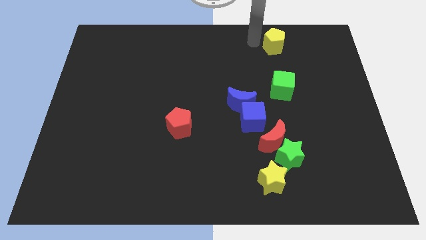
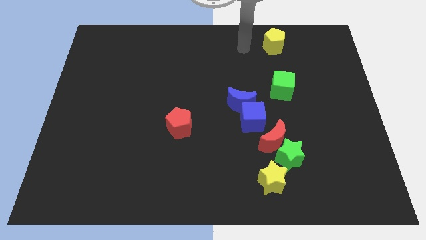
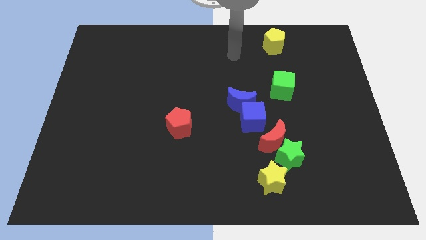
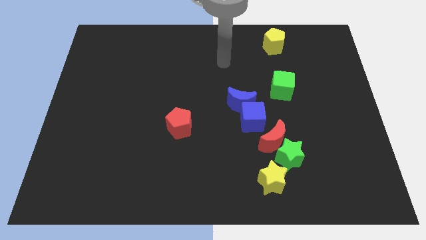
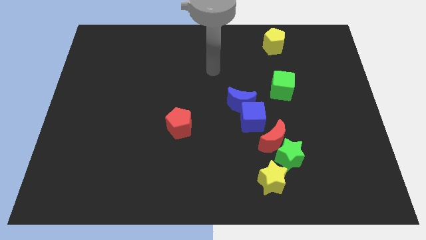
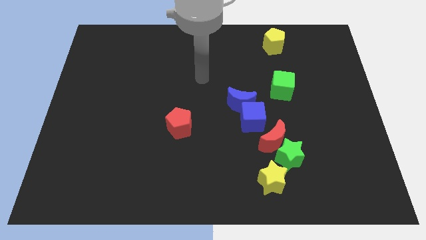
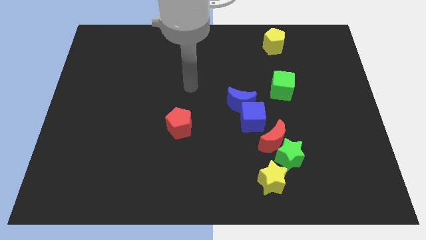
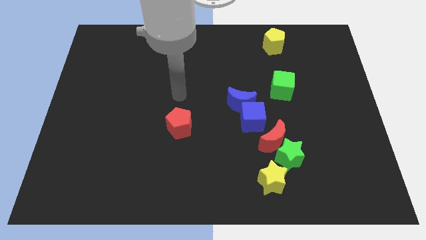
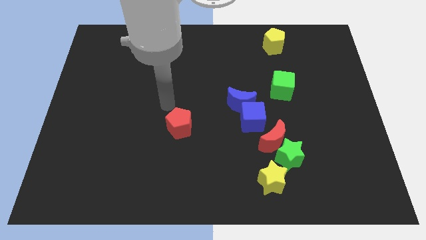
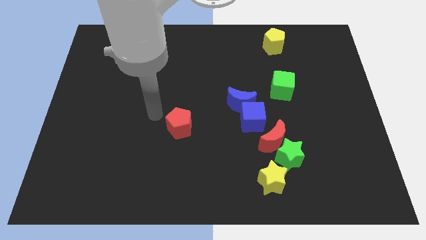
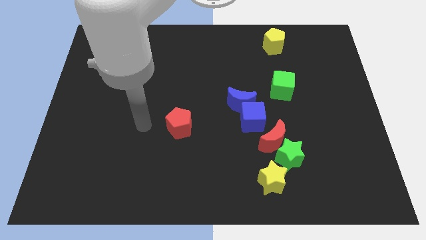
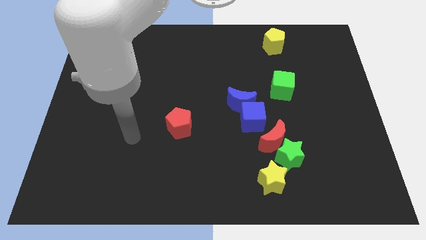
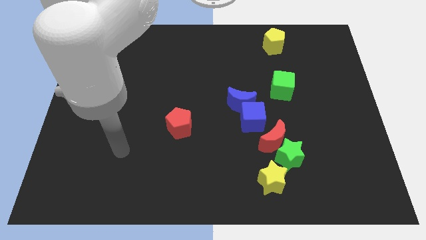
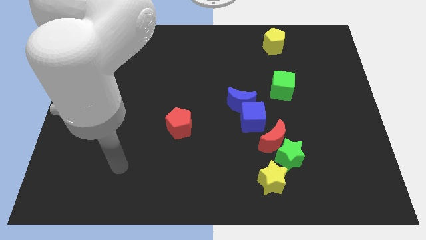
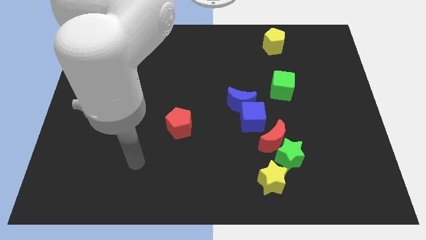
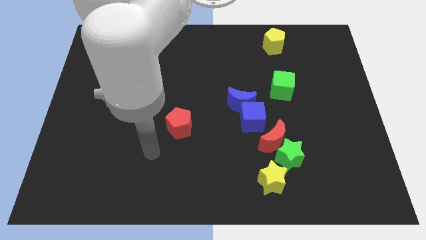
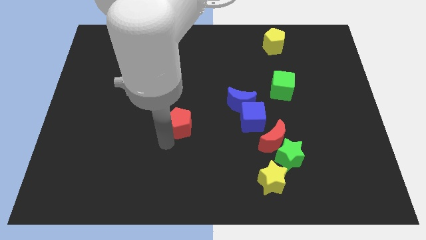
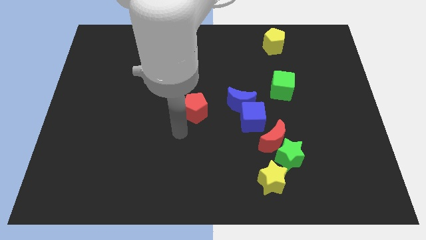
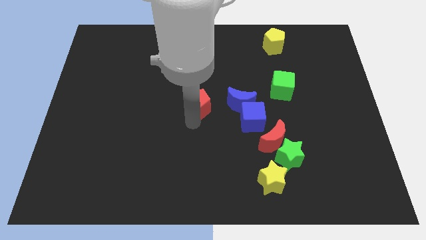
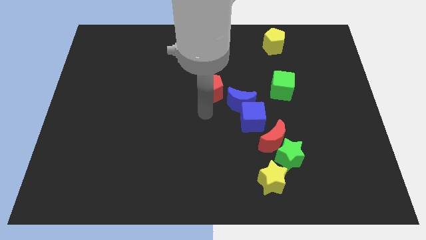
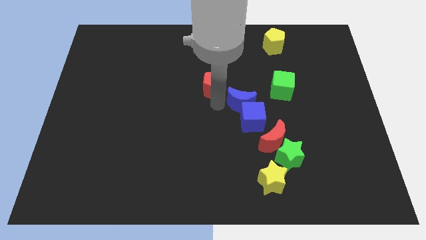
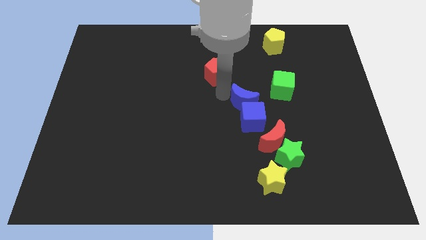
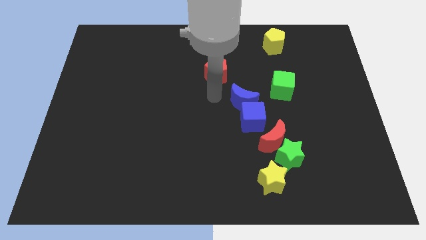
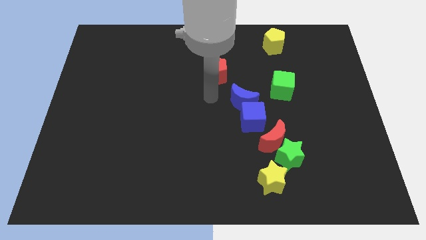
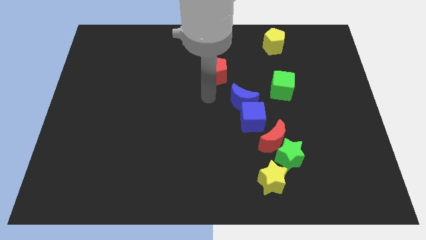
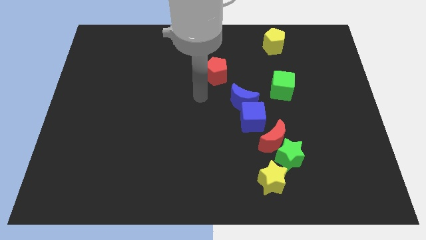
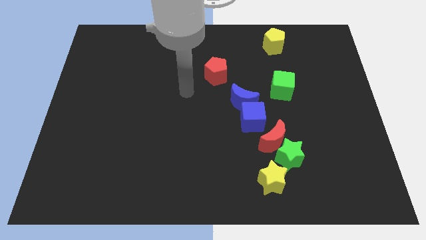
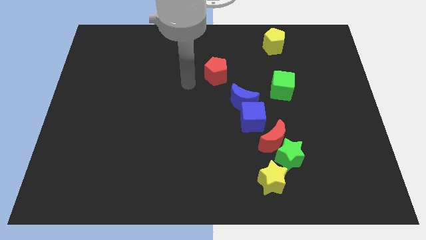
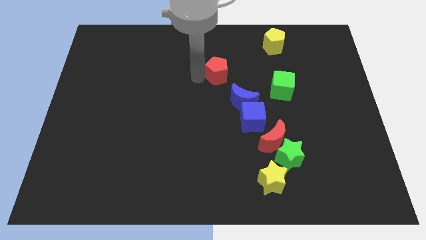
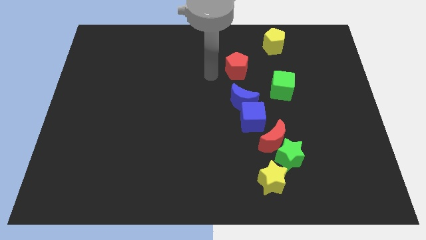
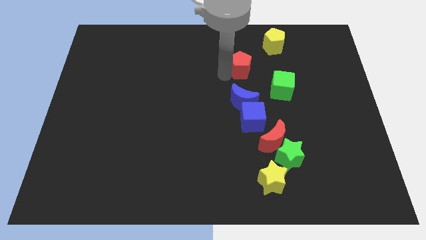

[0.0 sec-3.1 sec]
push the red pentagon to the top of the blue crescent

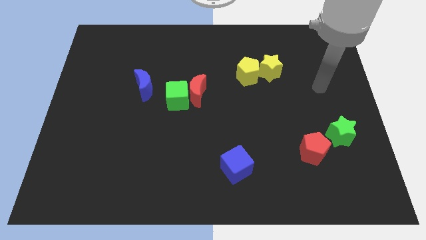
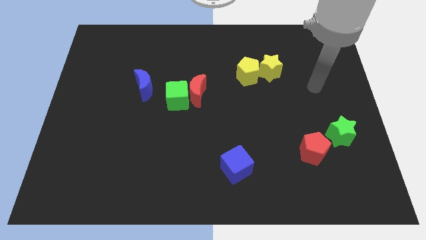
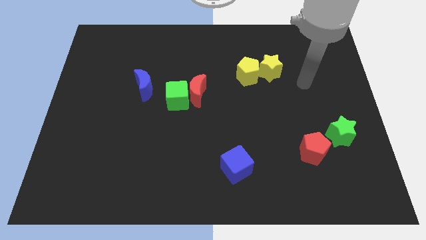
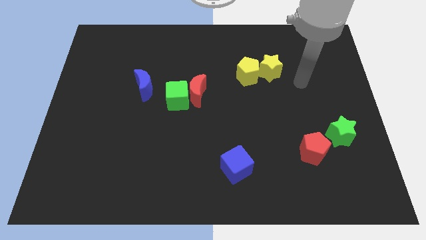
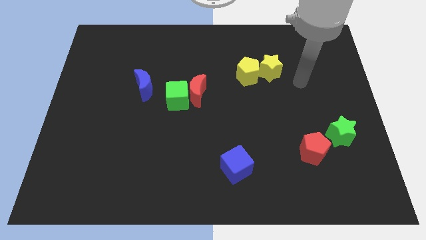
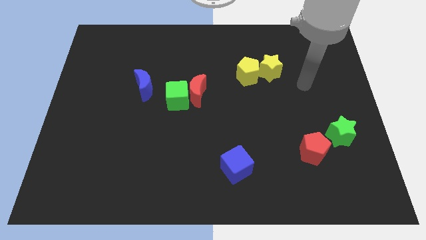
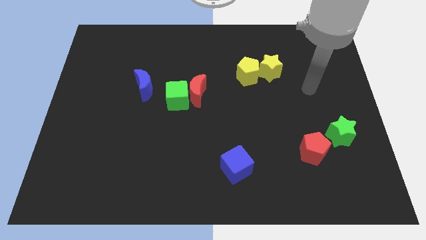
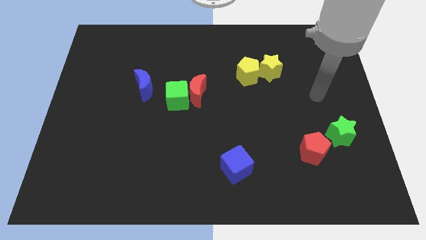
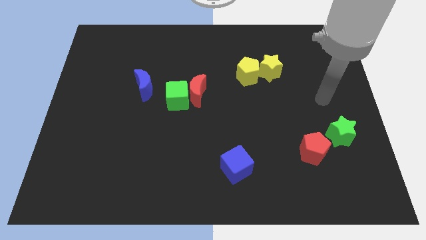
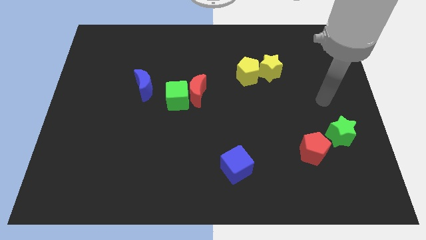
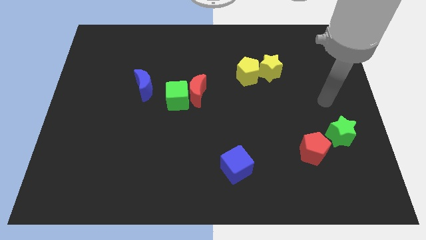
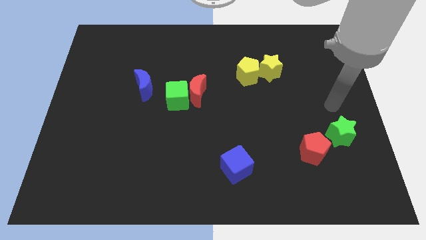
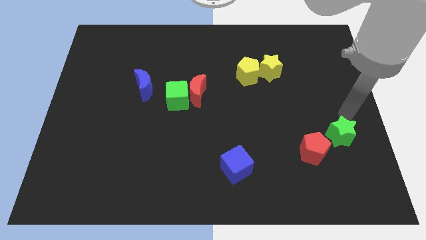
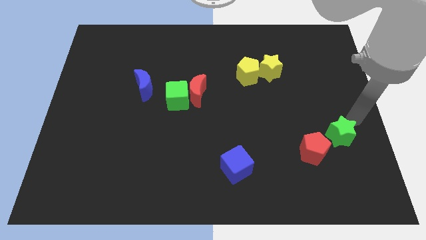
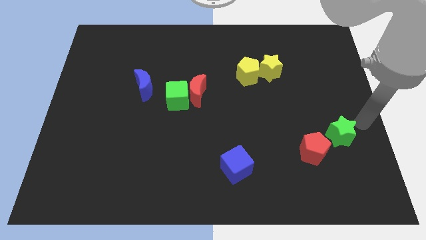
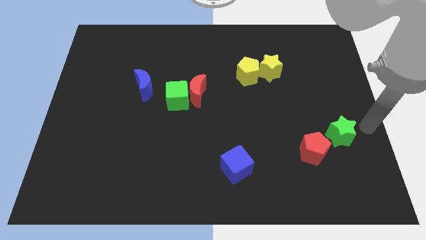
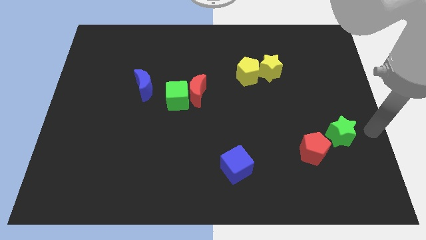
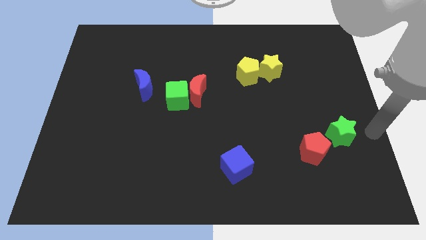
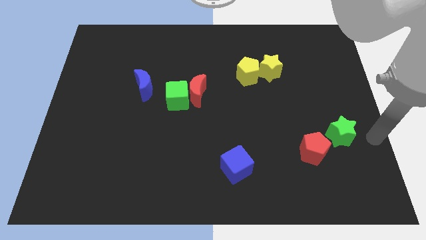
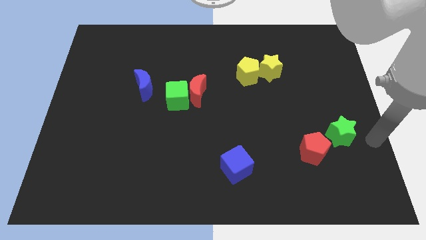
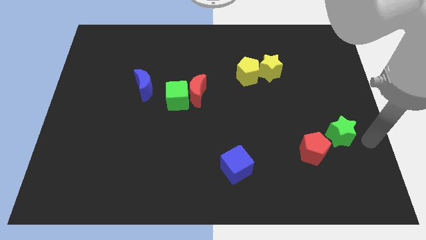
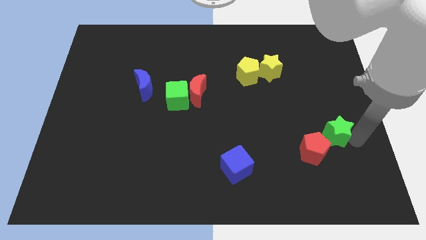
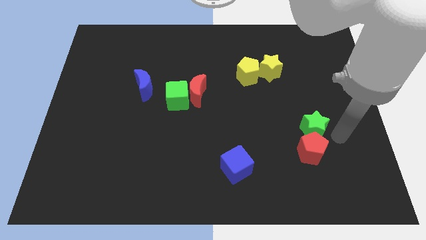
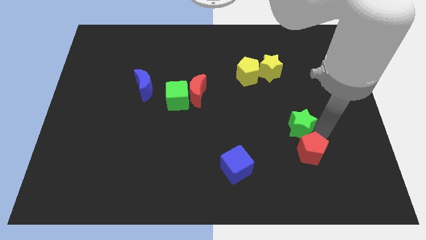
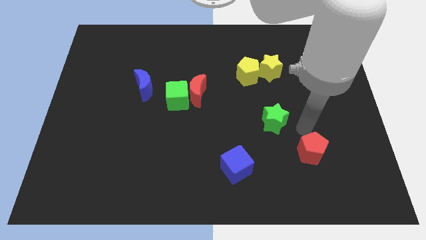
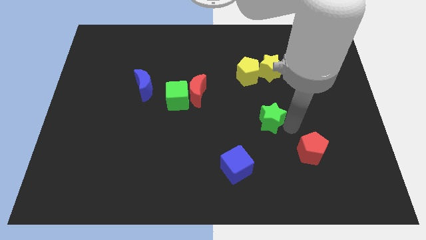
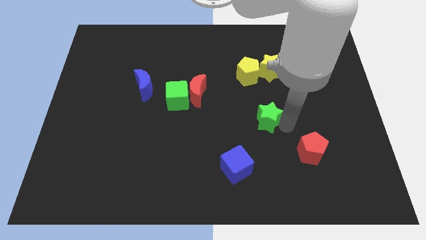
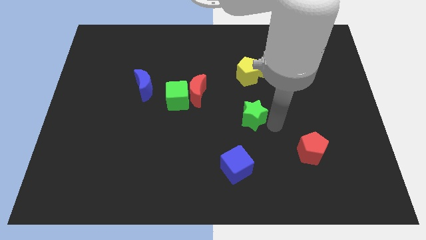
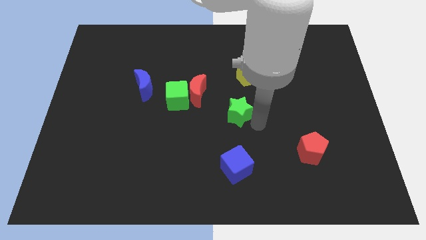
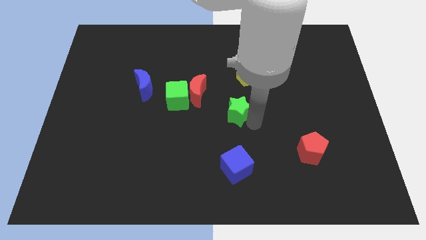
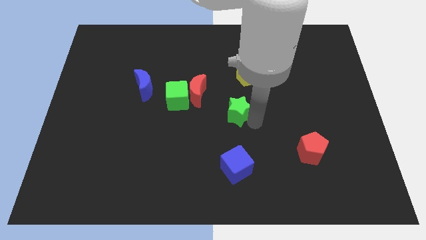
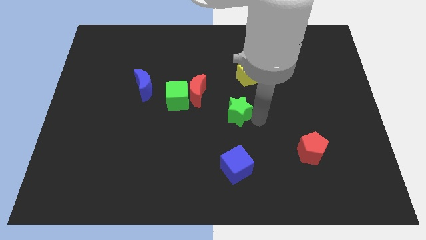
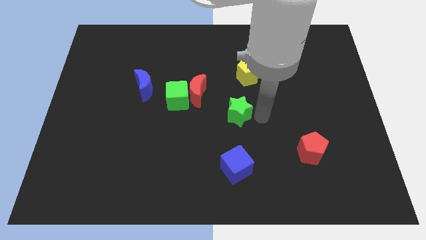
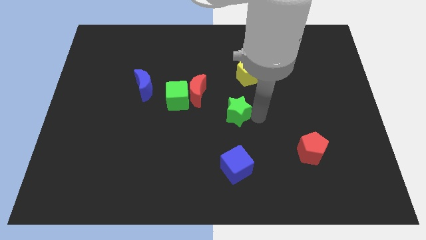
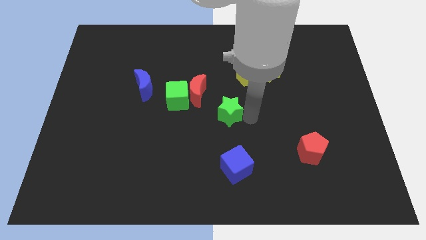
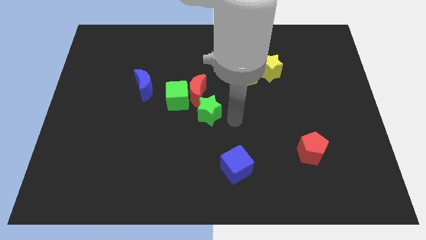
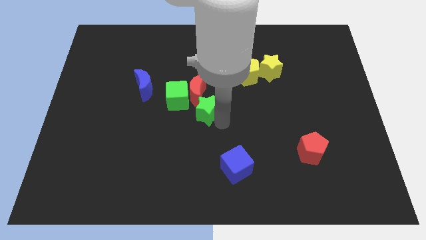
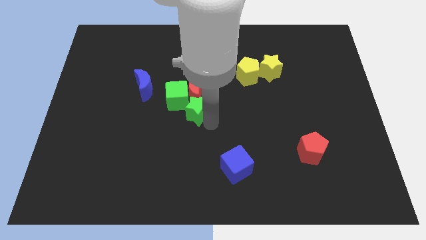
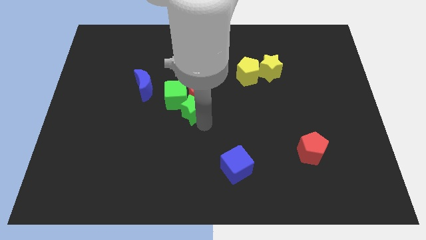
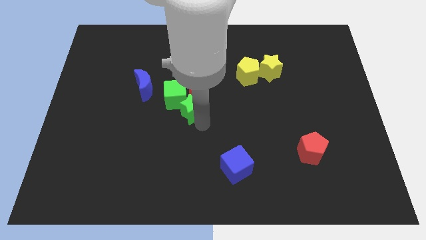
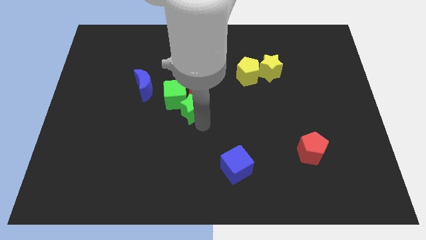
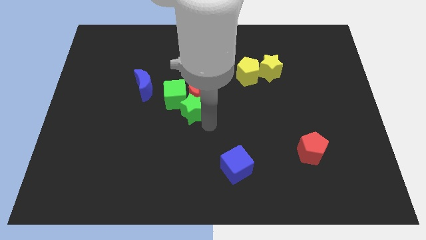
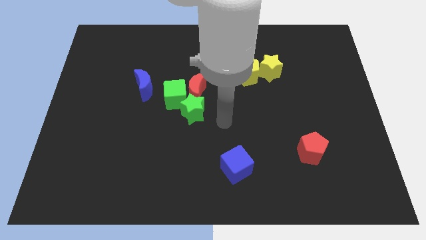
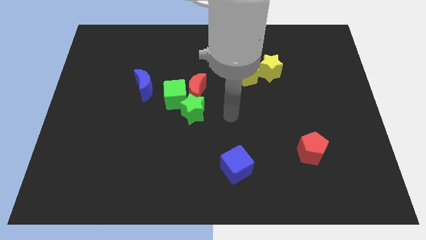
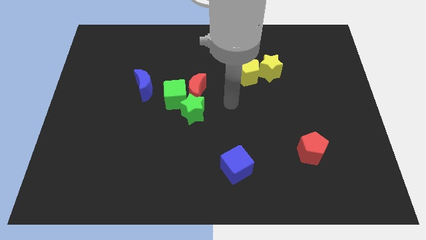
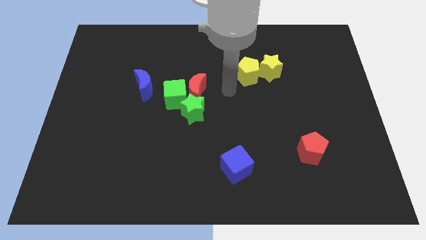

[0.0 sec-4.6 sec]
place the green star below to the red crescent

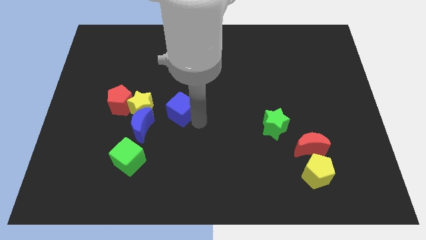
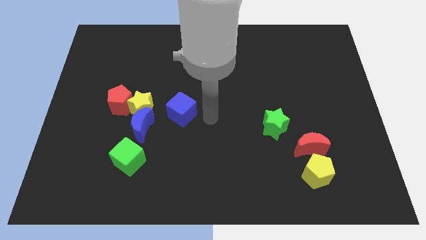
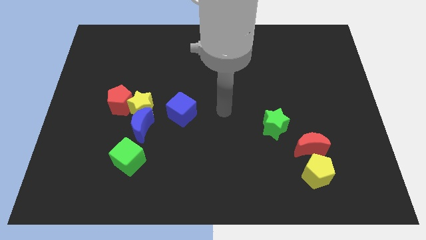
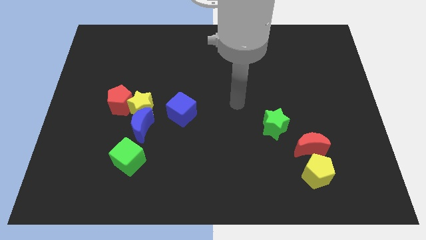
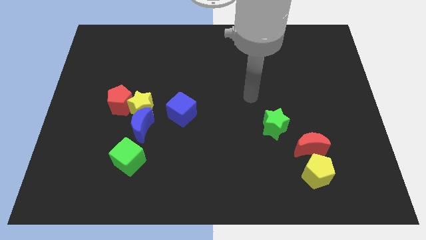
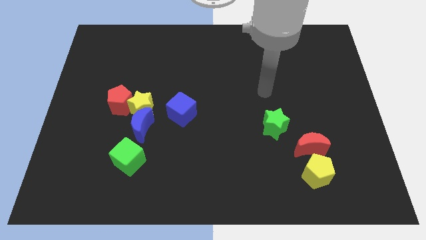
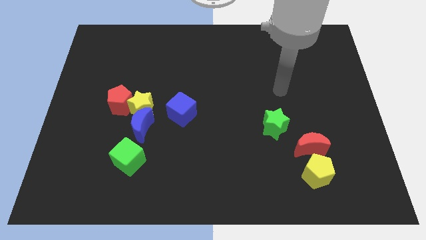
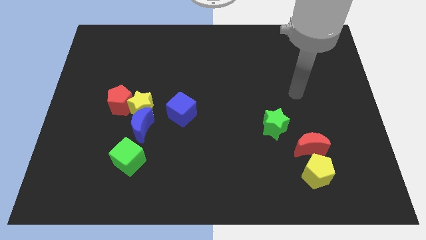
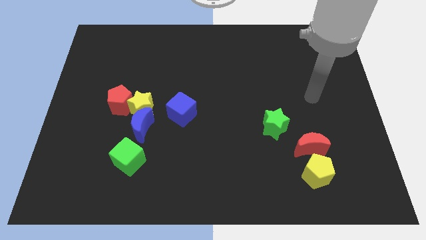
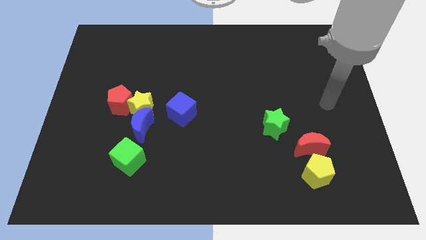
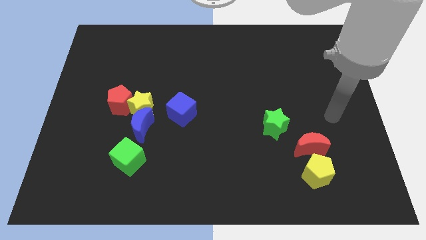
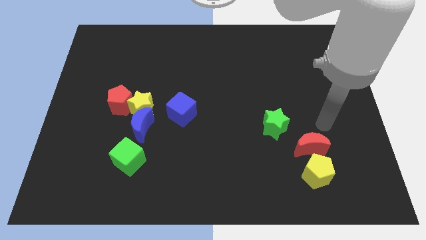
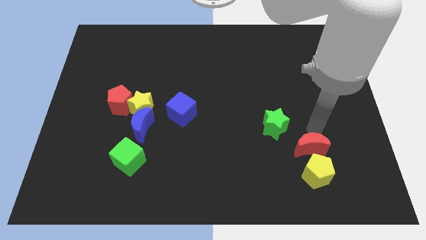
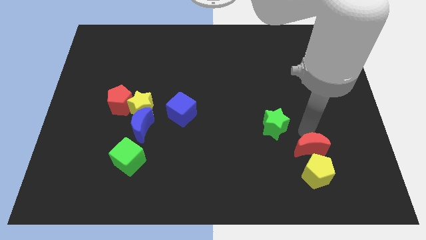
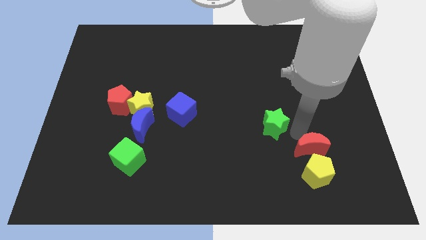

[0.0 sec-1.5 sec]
move your arm on the top of the red crescent
